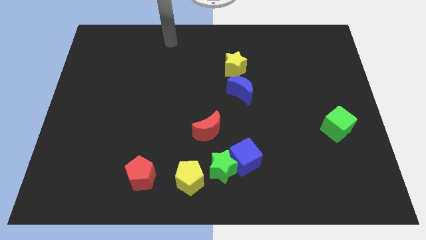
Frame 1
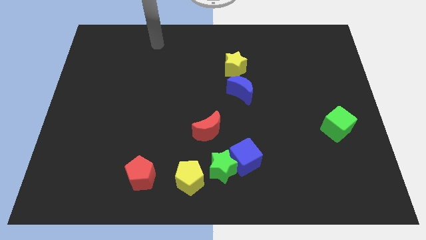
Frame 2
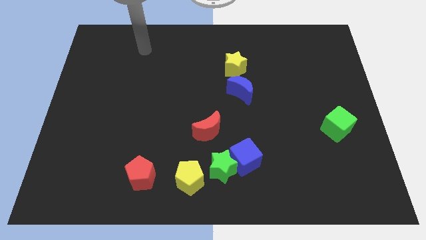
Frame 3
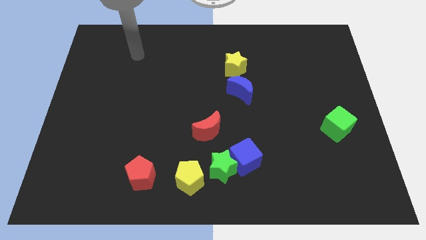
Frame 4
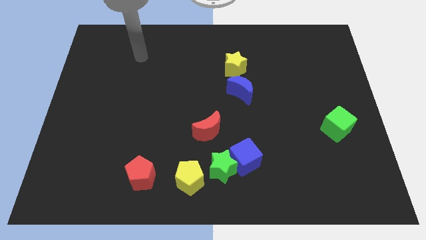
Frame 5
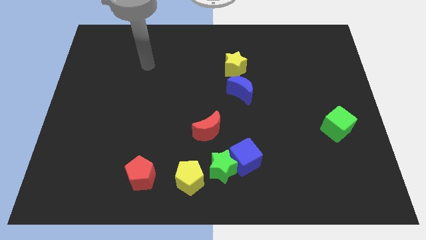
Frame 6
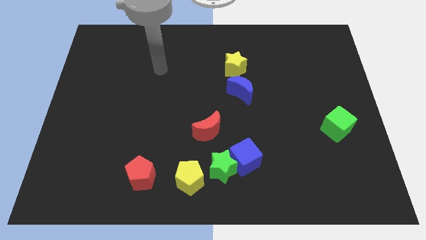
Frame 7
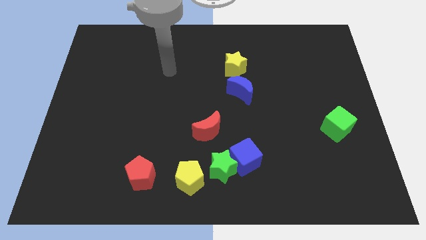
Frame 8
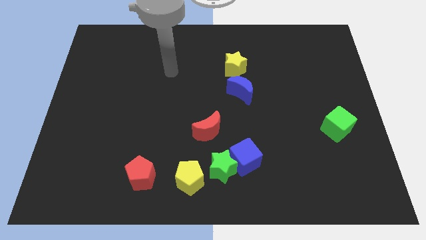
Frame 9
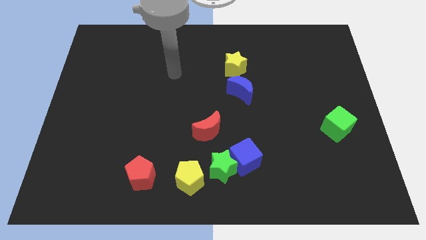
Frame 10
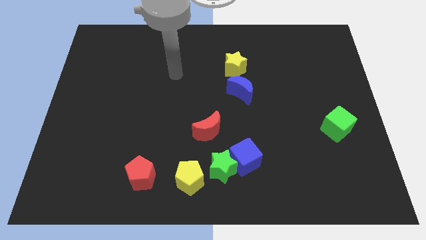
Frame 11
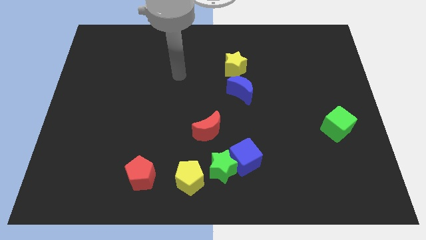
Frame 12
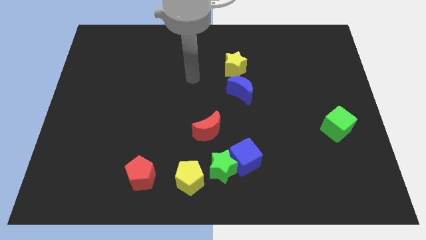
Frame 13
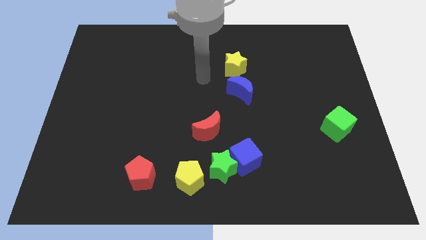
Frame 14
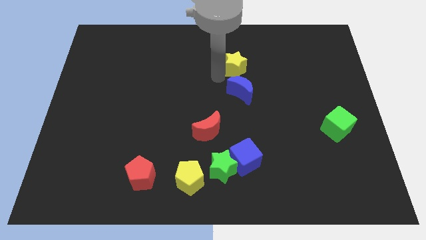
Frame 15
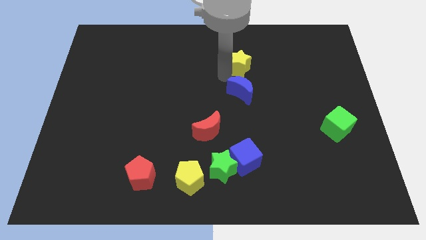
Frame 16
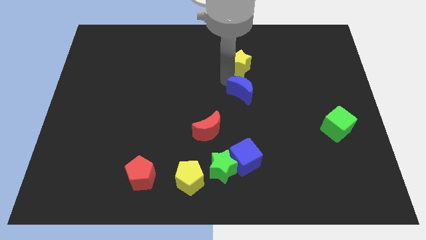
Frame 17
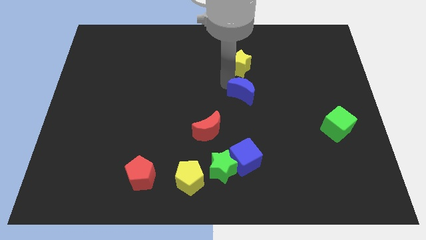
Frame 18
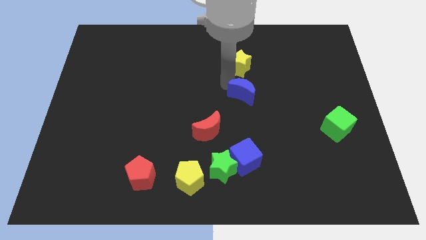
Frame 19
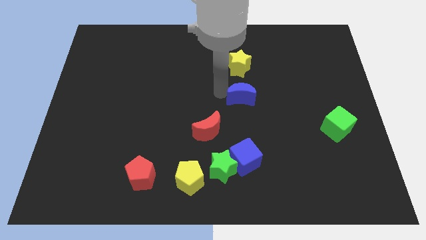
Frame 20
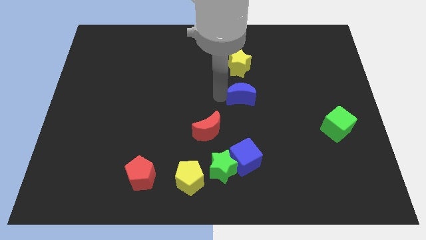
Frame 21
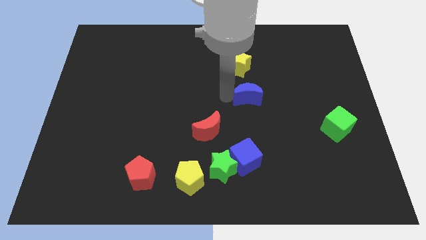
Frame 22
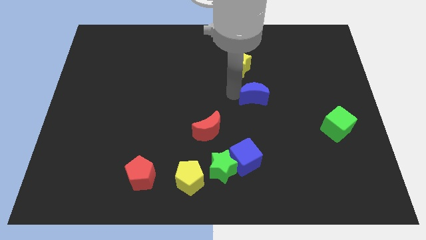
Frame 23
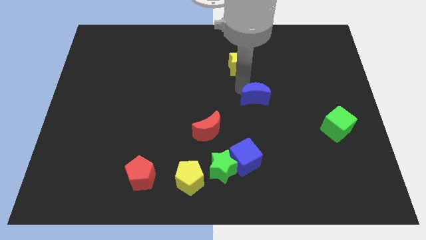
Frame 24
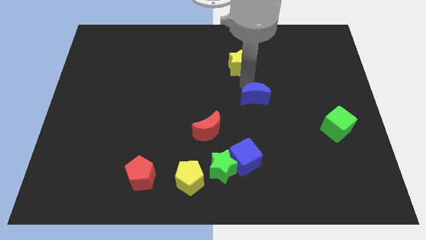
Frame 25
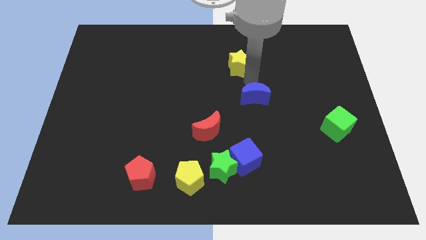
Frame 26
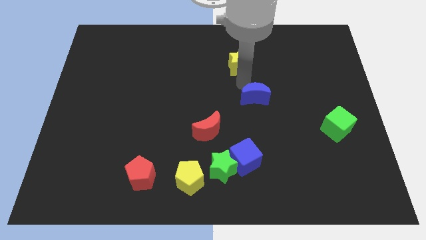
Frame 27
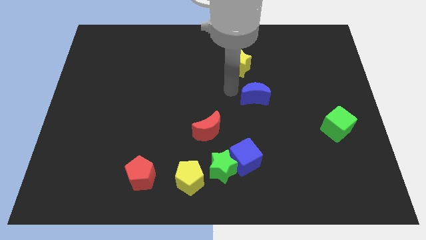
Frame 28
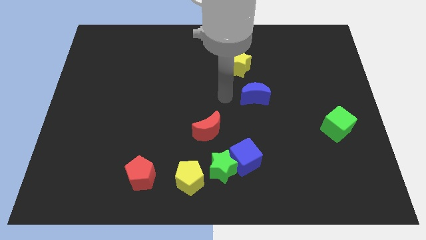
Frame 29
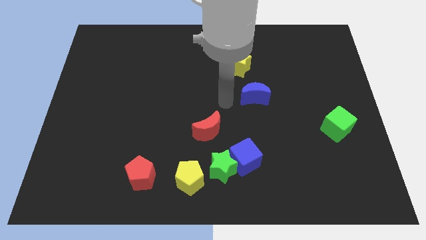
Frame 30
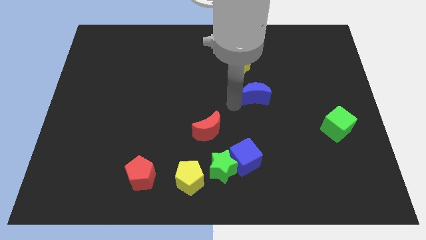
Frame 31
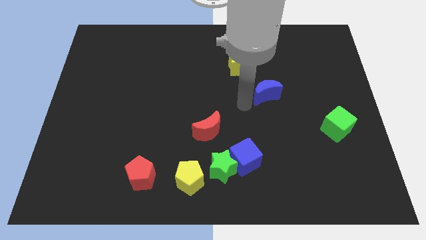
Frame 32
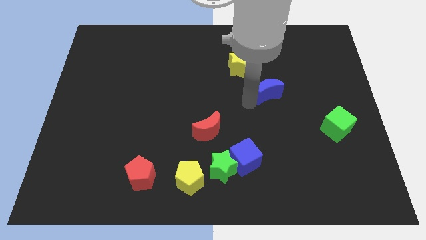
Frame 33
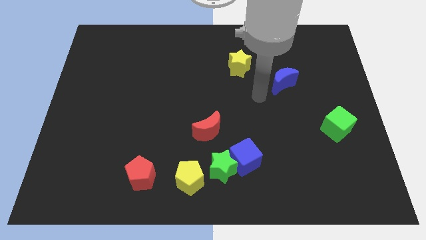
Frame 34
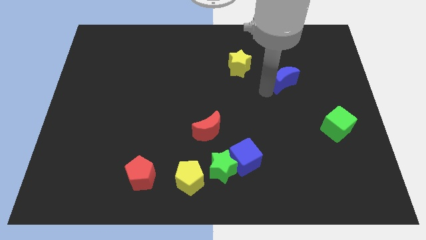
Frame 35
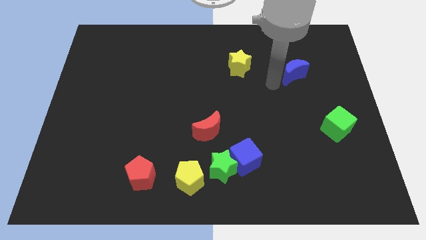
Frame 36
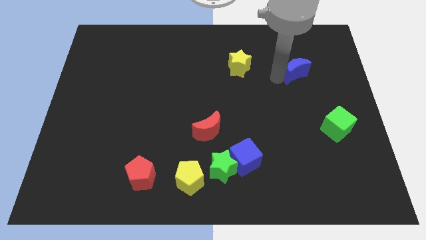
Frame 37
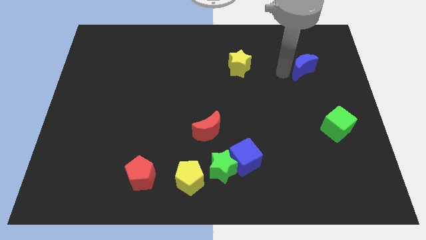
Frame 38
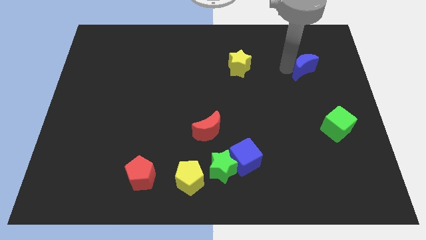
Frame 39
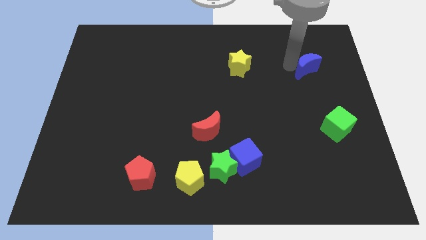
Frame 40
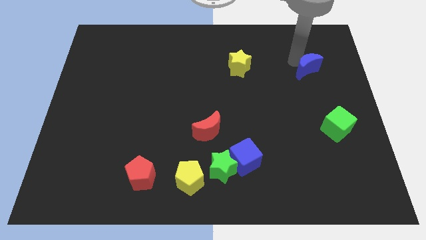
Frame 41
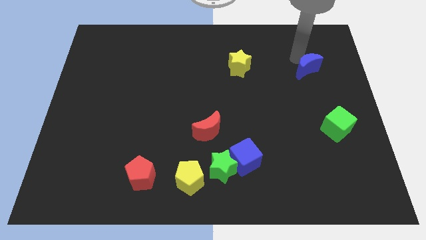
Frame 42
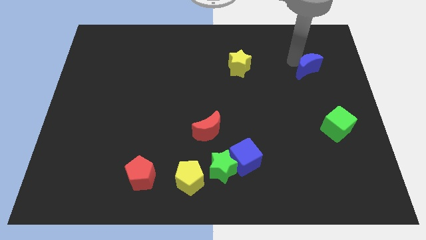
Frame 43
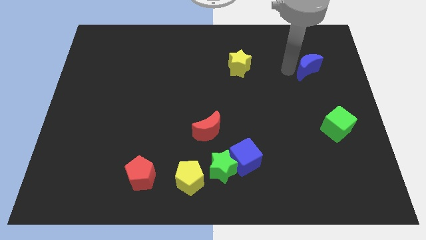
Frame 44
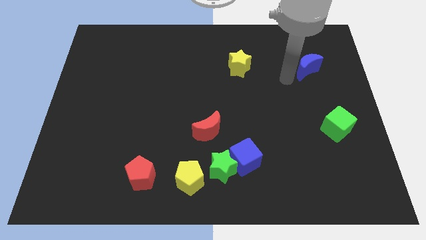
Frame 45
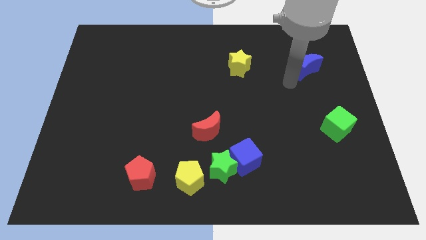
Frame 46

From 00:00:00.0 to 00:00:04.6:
push the blue crescent to the right of the board

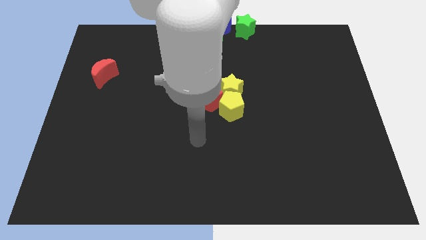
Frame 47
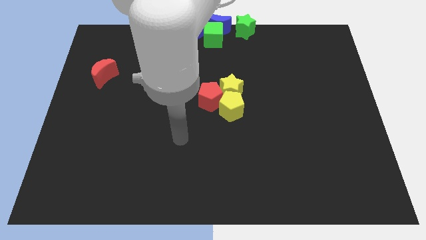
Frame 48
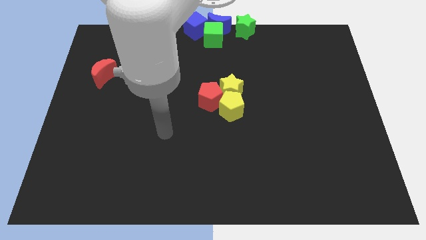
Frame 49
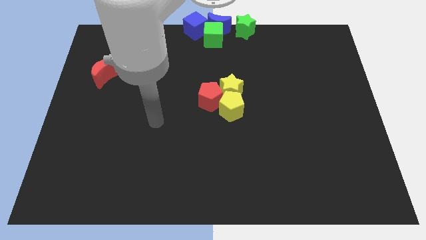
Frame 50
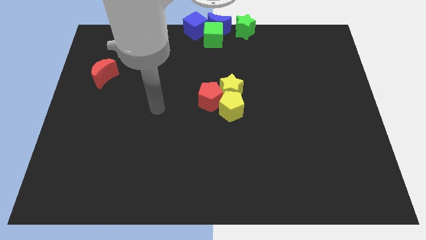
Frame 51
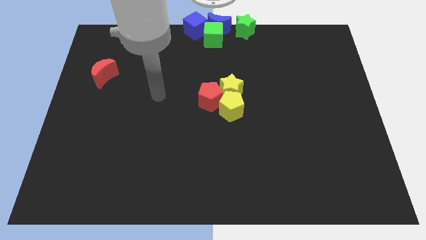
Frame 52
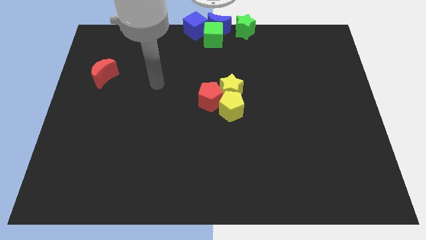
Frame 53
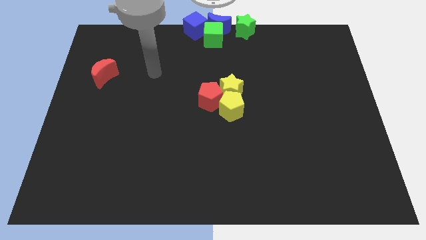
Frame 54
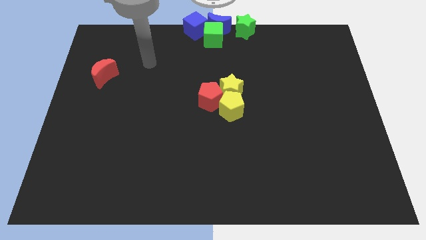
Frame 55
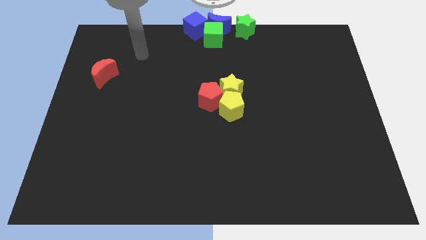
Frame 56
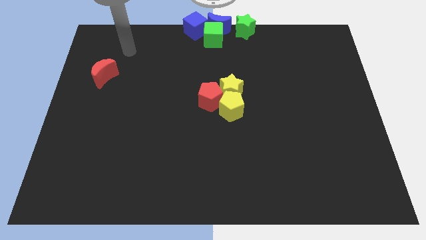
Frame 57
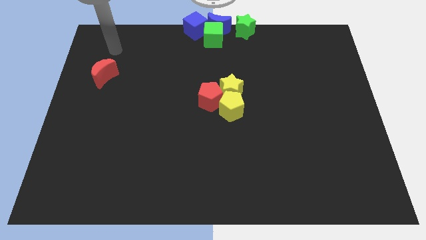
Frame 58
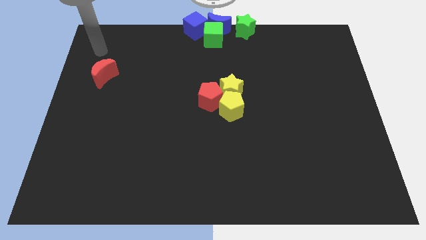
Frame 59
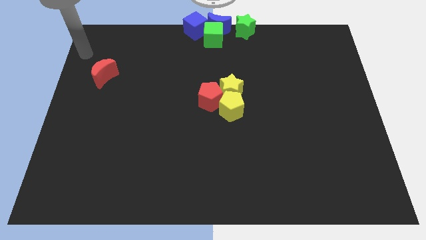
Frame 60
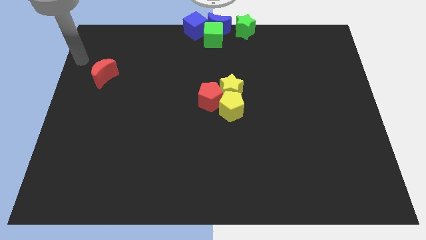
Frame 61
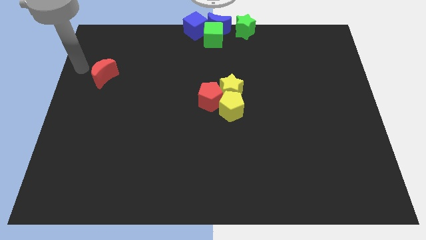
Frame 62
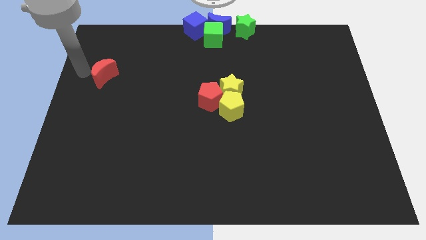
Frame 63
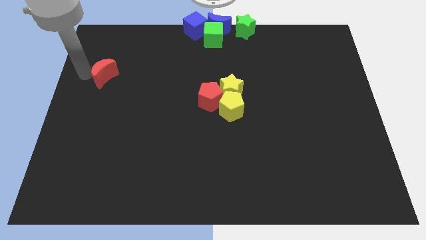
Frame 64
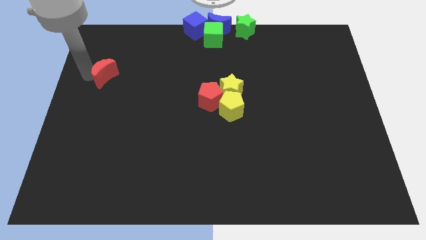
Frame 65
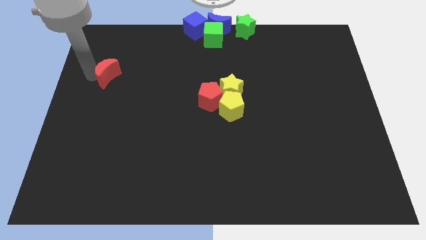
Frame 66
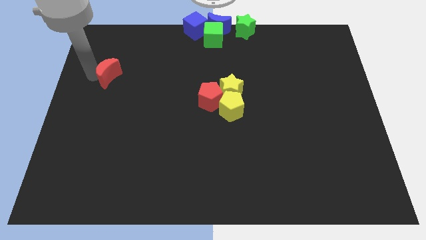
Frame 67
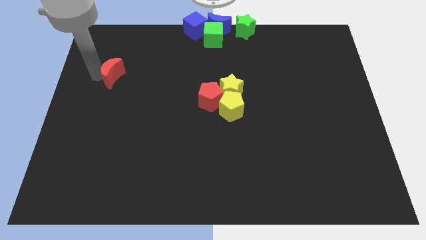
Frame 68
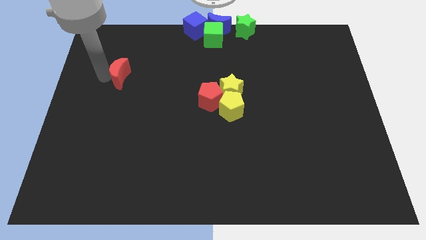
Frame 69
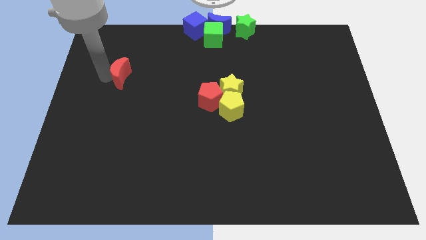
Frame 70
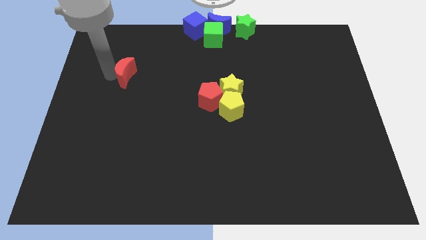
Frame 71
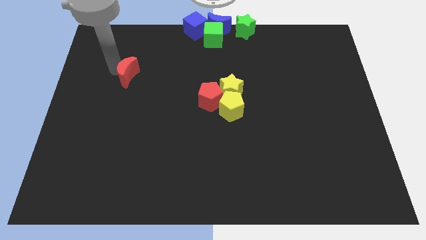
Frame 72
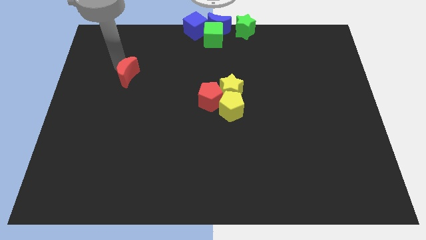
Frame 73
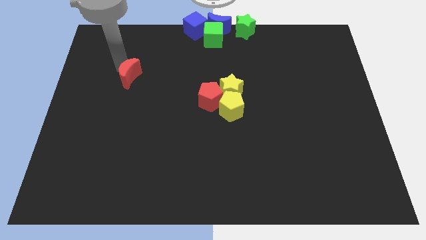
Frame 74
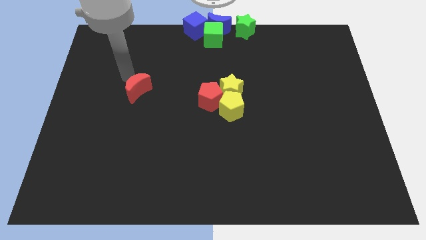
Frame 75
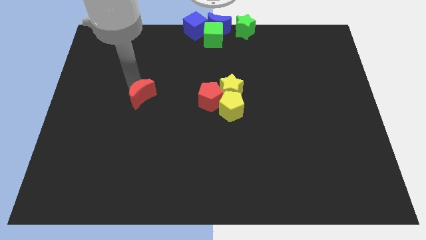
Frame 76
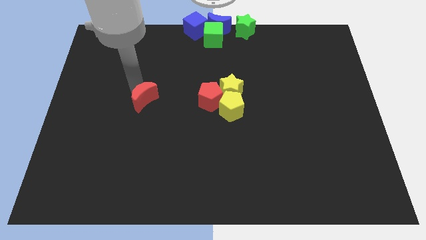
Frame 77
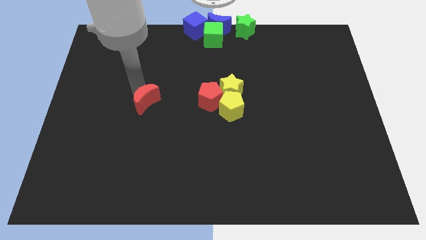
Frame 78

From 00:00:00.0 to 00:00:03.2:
drag the red crescent towards the red pentagon

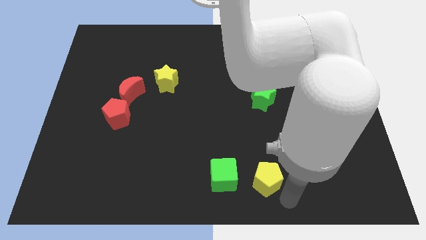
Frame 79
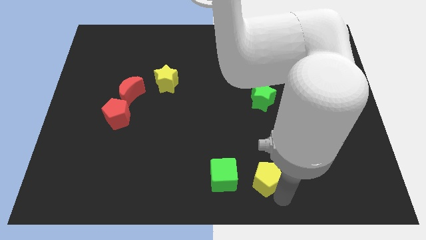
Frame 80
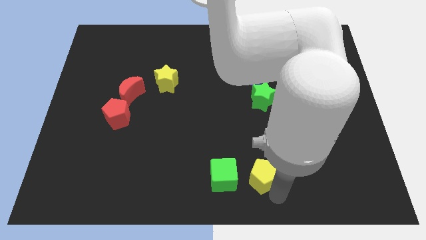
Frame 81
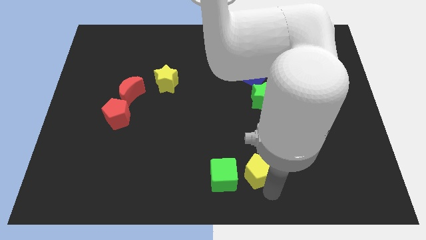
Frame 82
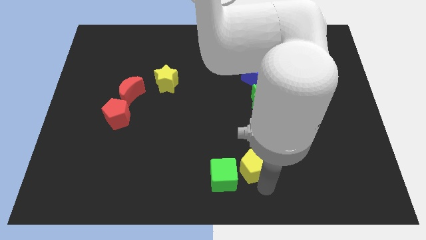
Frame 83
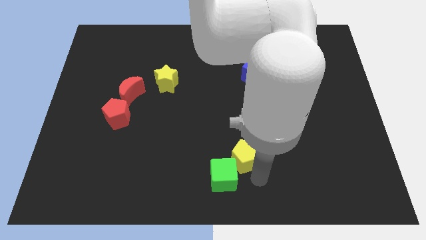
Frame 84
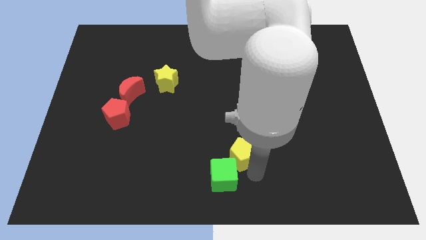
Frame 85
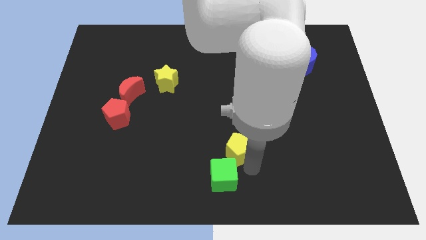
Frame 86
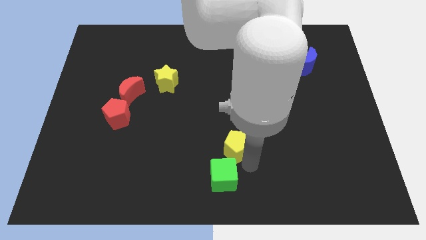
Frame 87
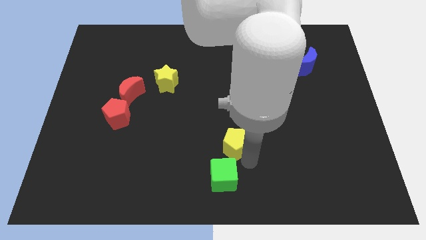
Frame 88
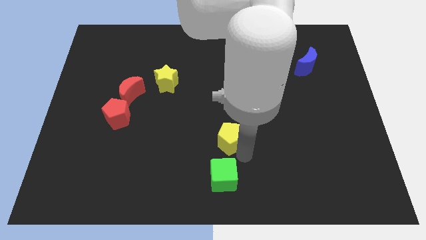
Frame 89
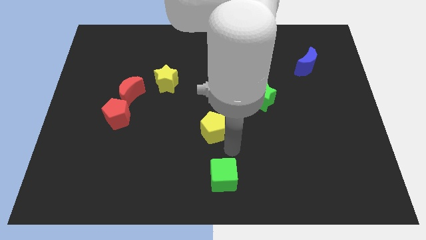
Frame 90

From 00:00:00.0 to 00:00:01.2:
place the yellow pentagon above the green cube
